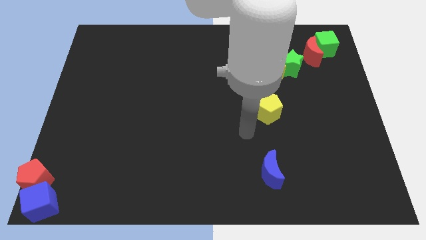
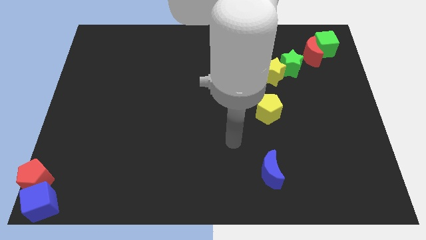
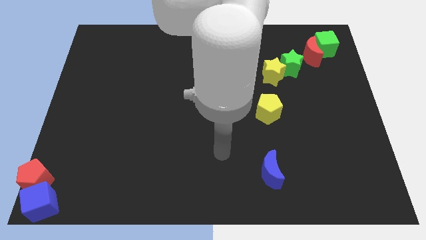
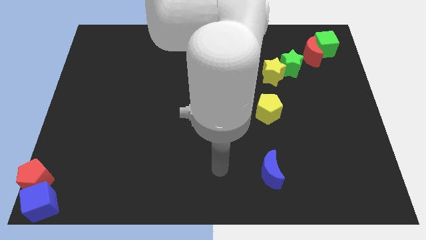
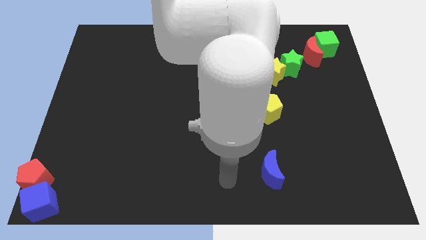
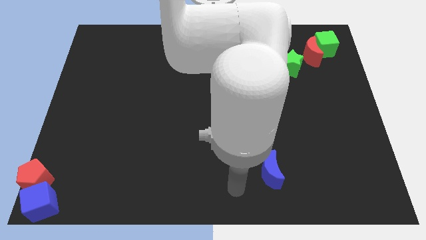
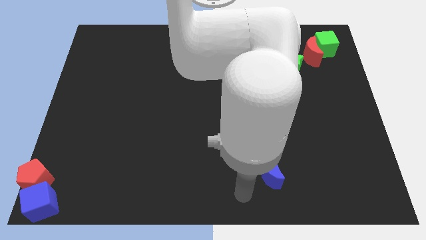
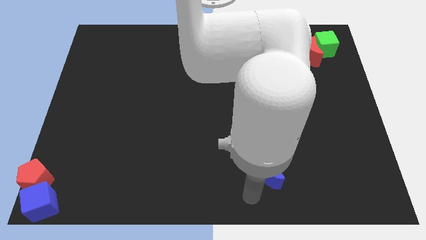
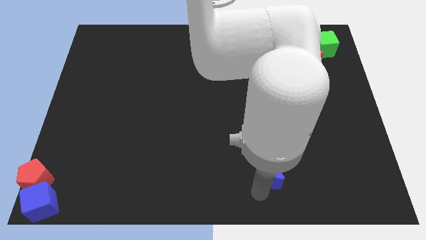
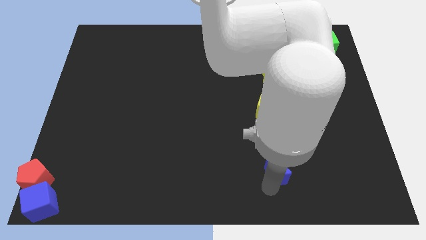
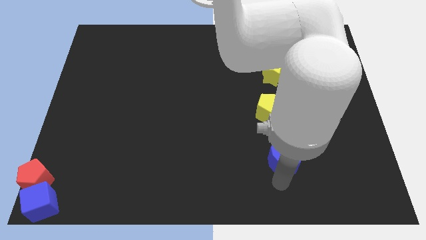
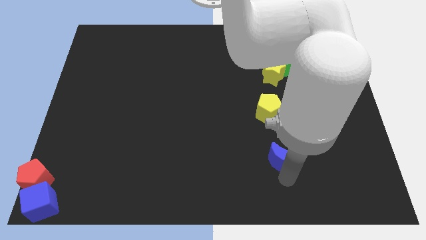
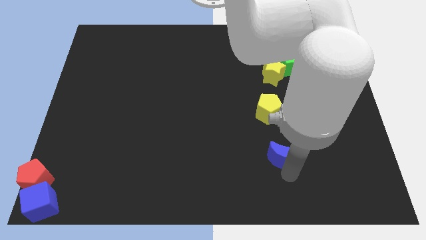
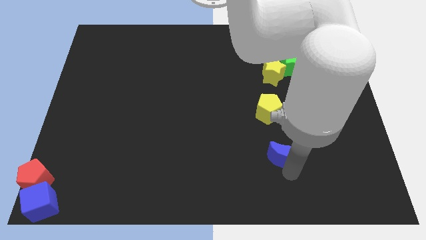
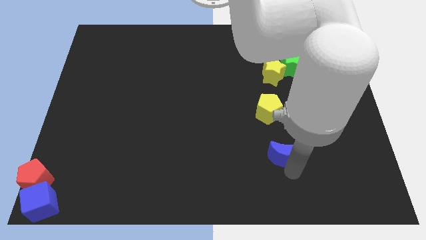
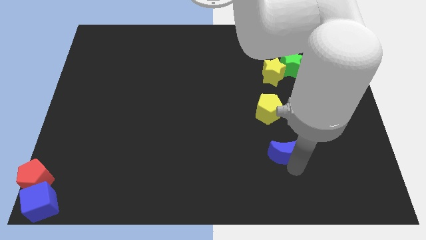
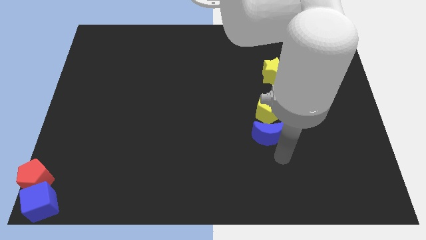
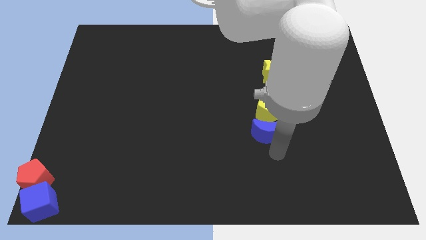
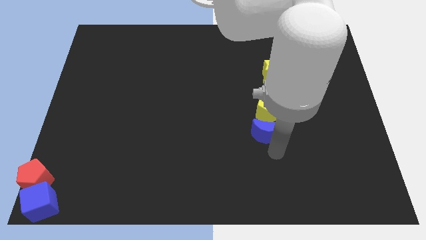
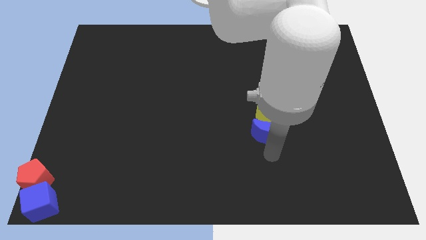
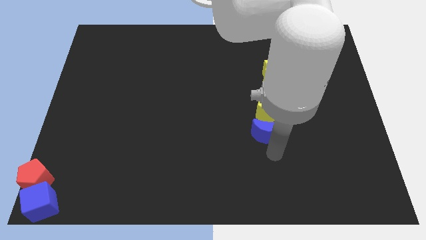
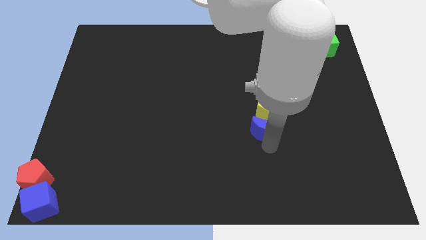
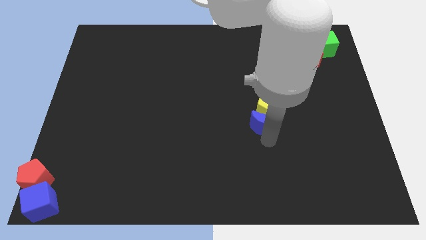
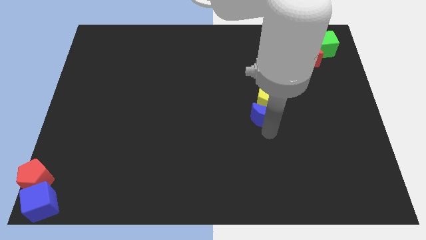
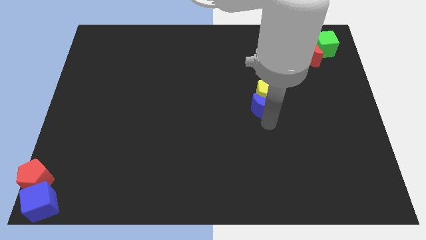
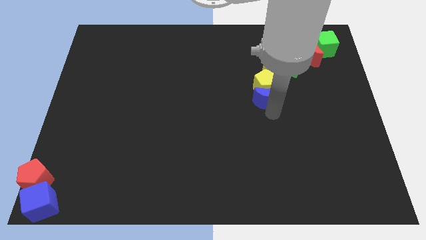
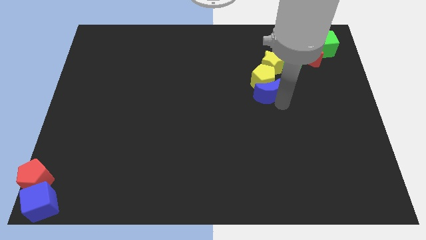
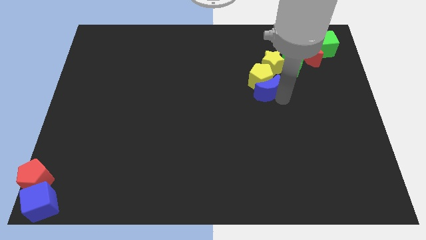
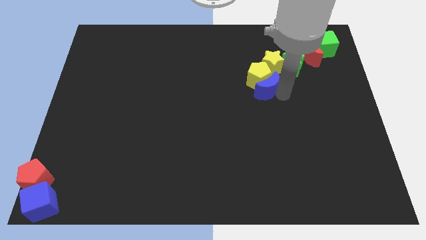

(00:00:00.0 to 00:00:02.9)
push the blue crescent along with the yellow pentagon to the bottom left of the yellow star

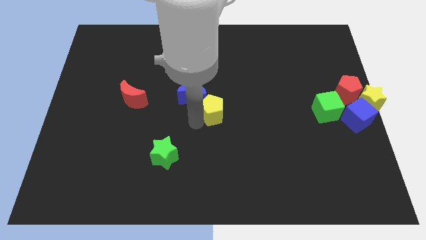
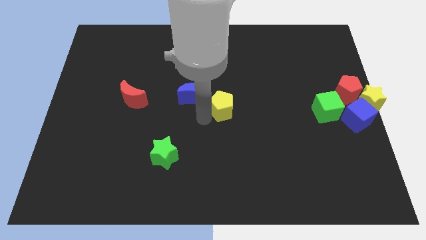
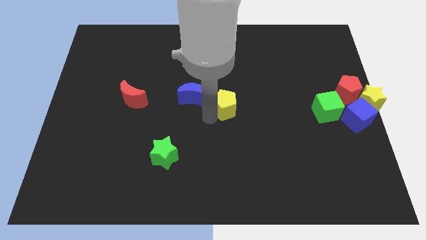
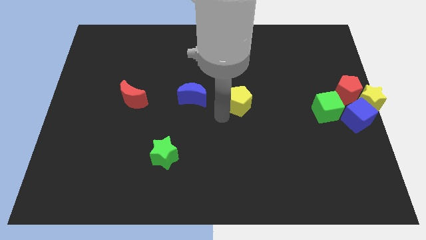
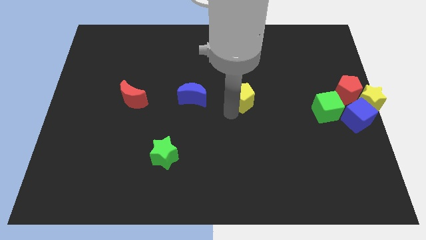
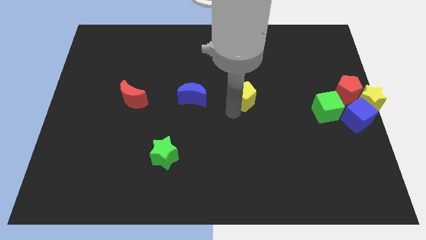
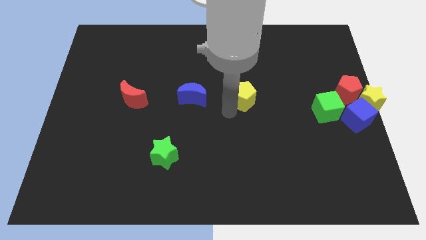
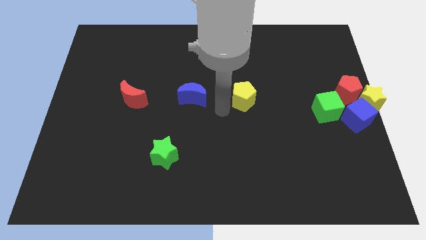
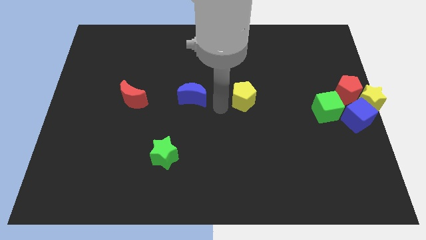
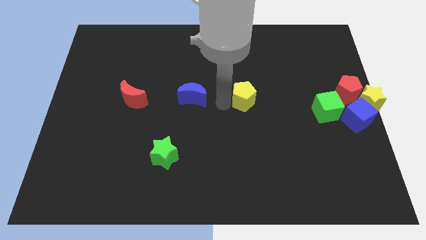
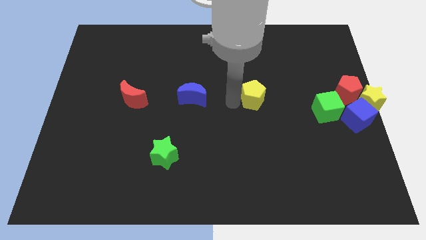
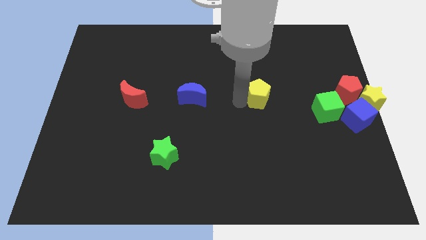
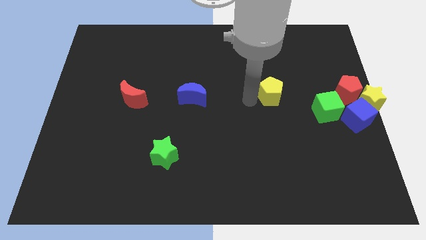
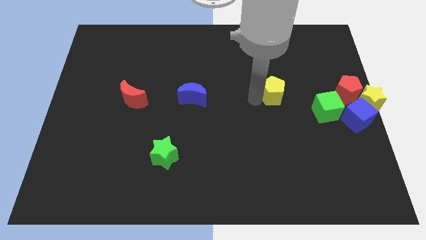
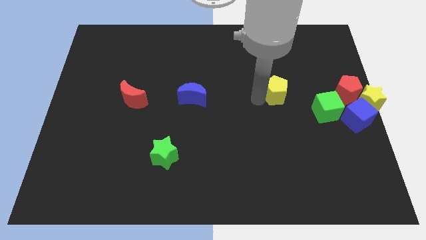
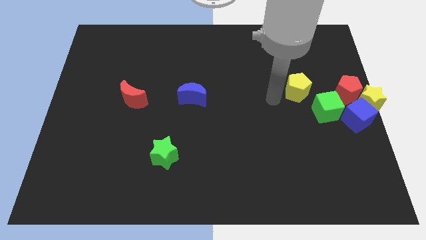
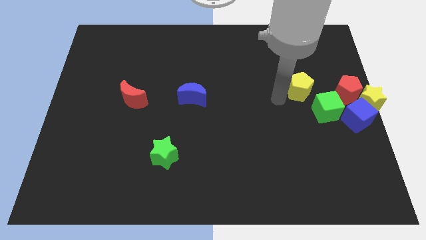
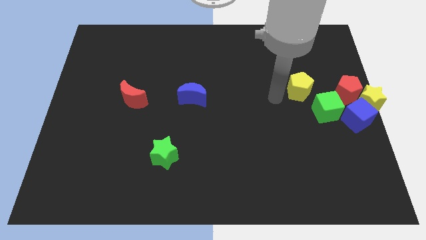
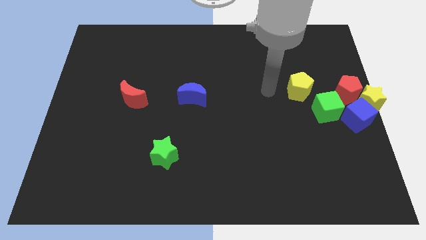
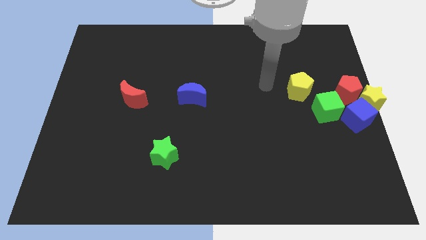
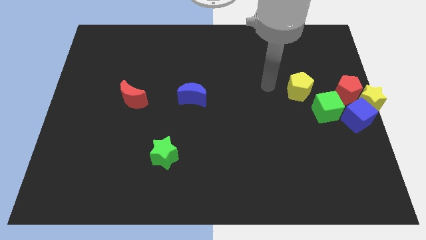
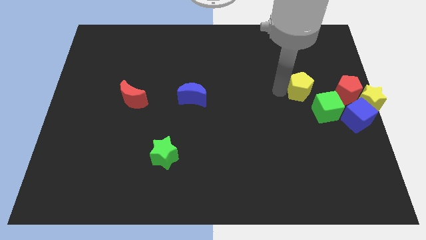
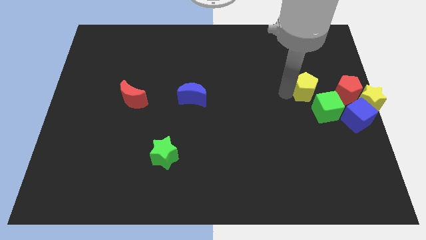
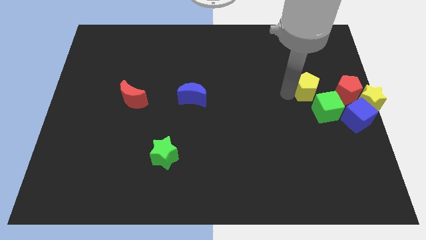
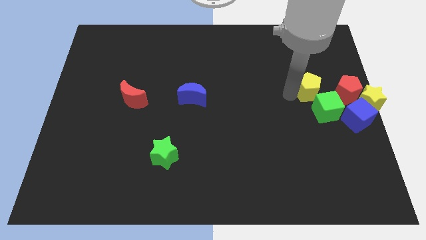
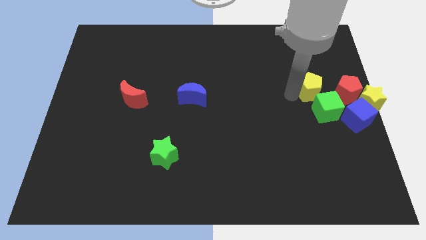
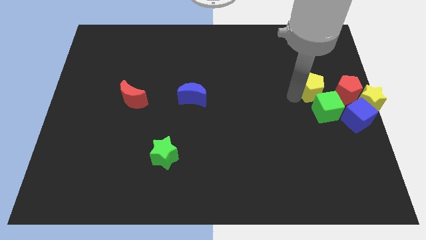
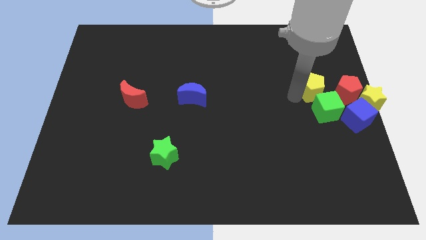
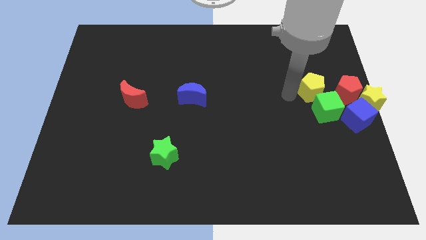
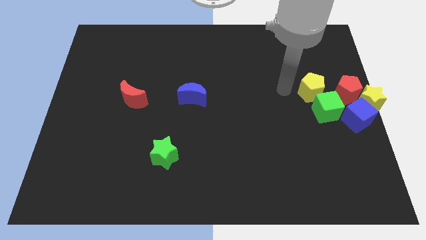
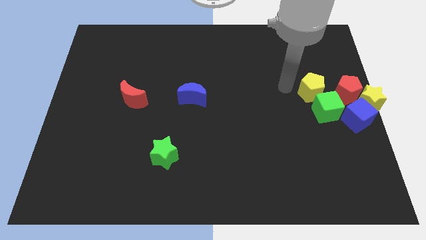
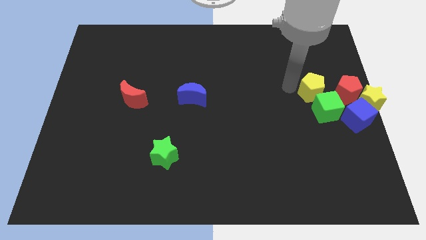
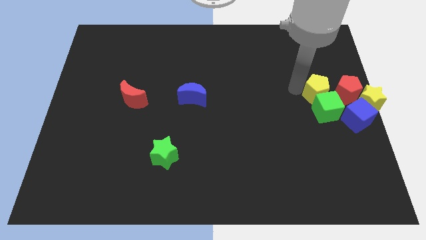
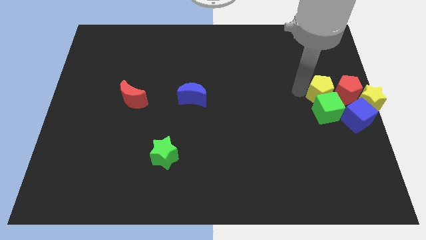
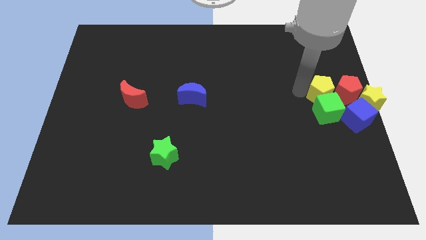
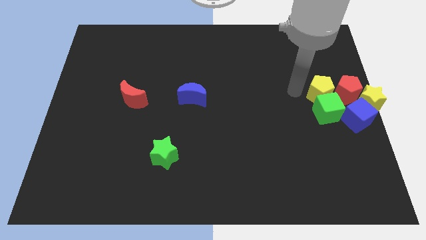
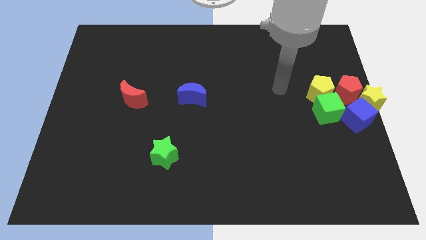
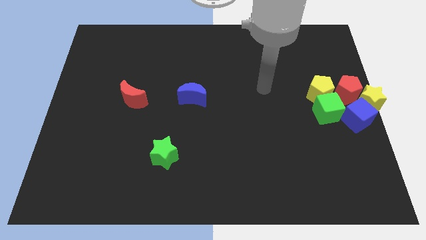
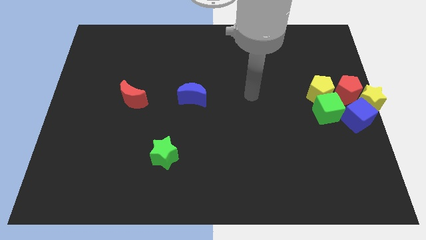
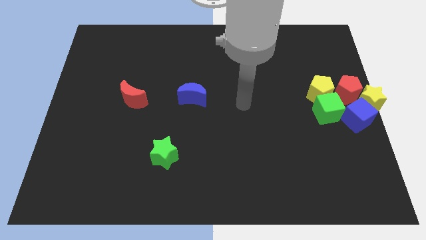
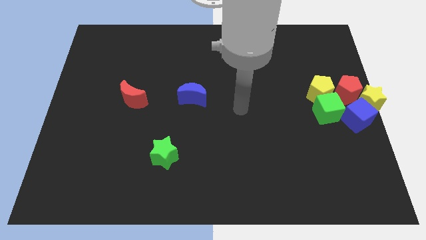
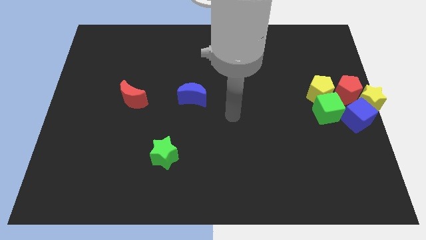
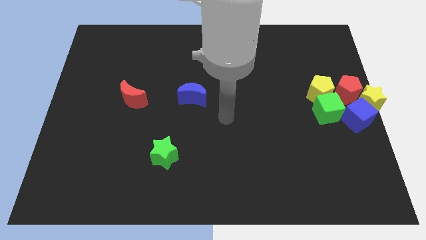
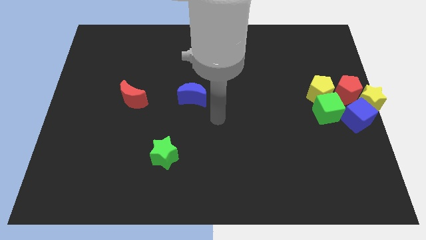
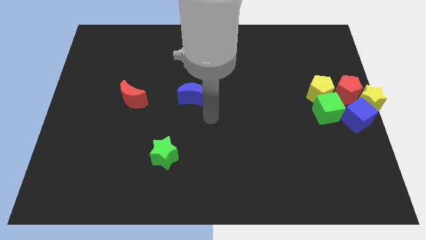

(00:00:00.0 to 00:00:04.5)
push the yellow pentagon towards the bottom left side of the red pentagom

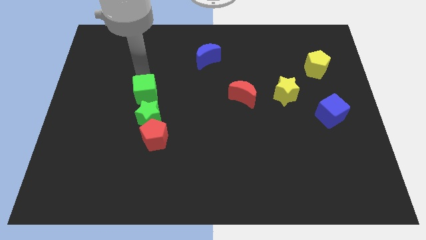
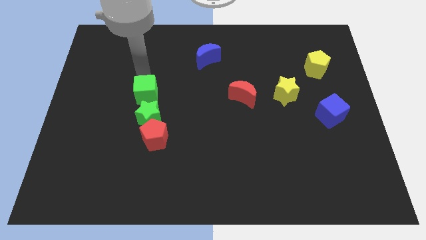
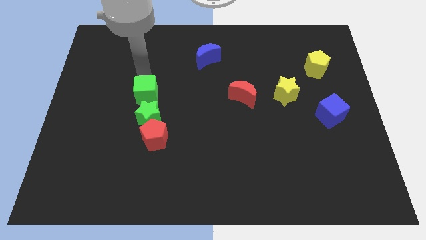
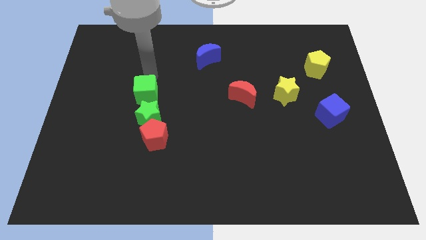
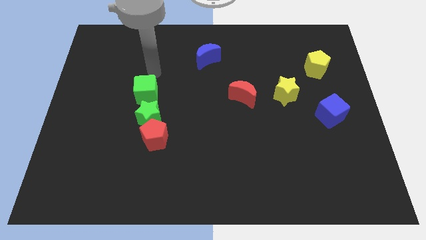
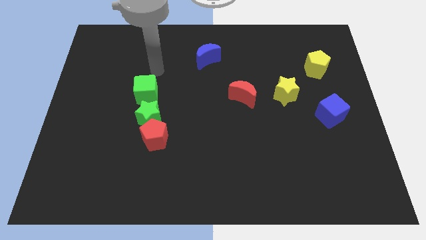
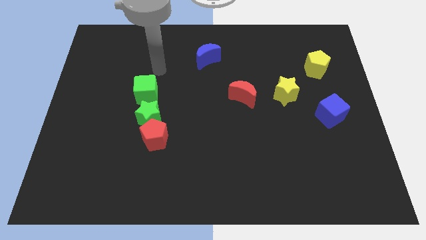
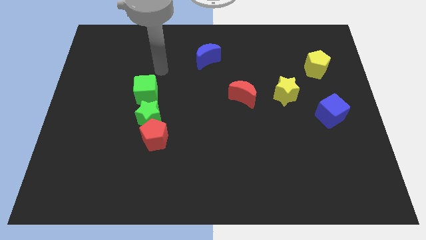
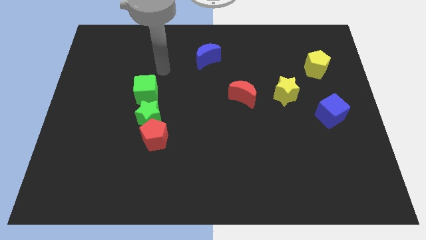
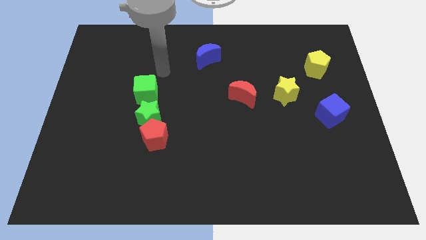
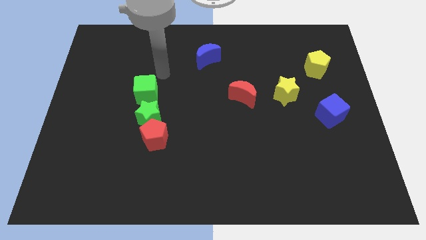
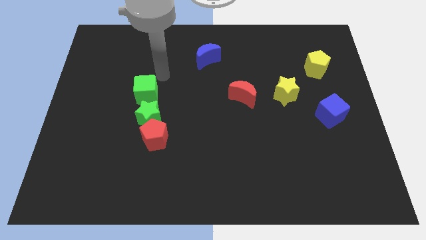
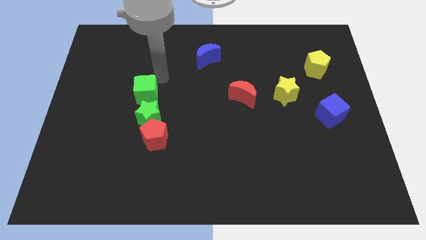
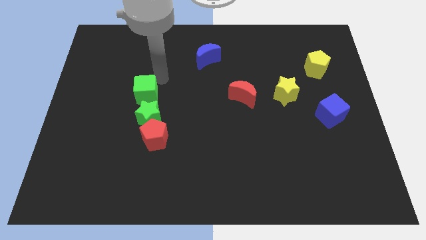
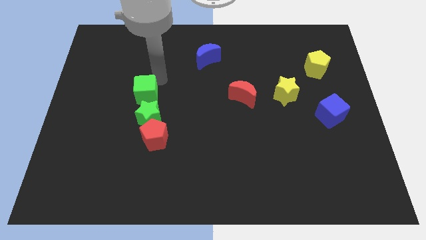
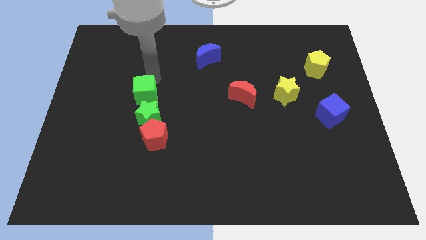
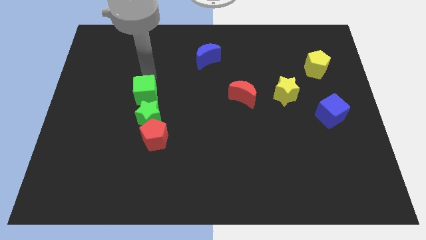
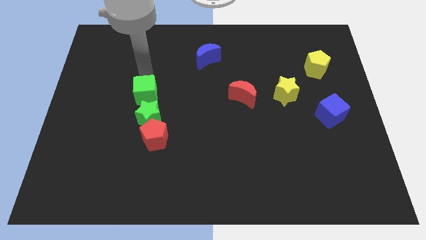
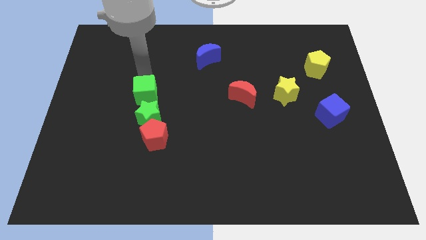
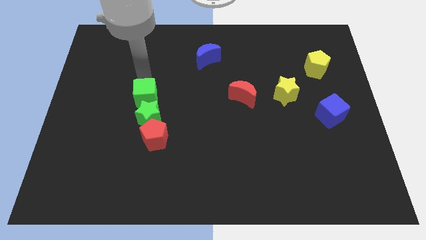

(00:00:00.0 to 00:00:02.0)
move the green cube close to the green star
